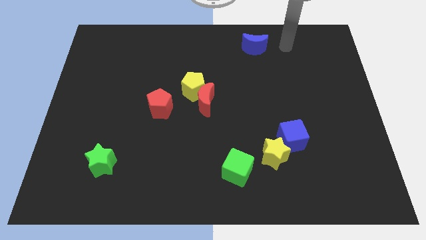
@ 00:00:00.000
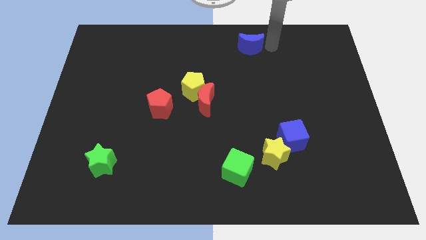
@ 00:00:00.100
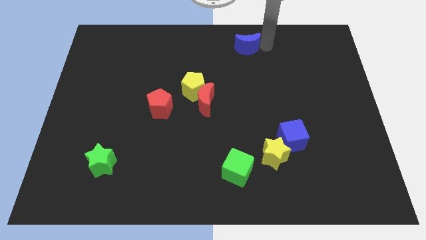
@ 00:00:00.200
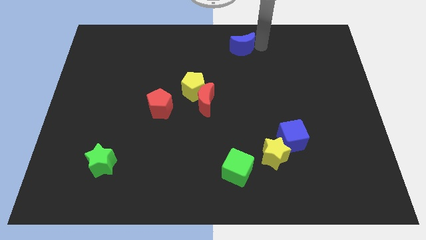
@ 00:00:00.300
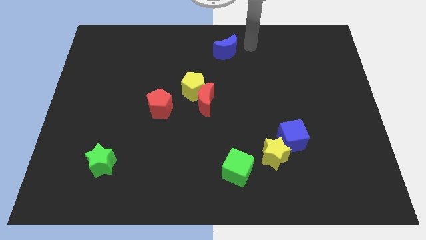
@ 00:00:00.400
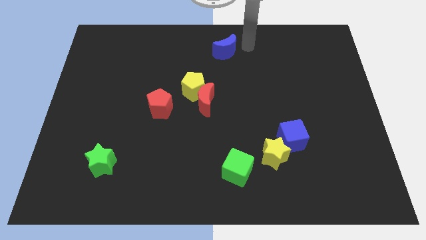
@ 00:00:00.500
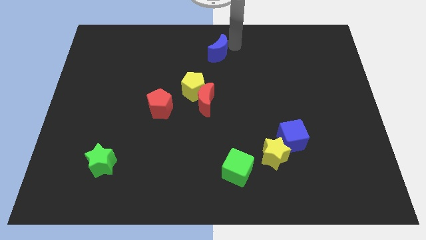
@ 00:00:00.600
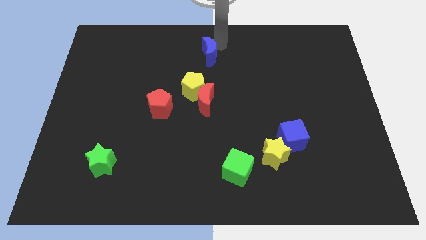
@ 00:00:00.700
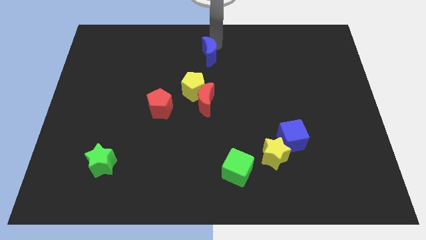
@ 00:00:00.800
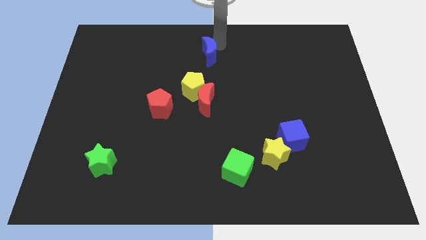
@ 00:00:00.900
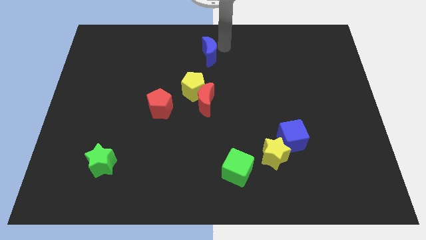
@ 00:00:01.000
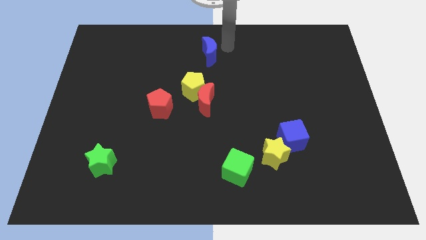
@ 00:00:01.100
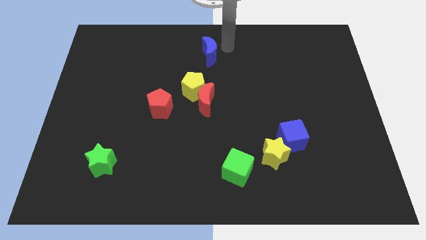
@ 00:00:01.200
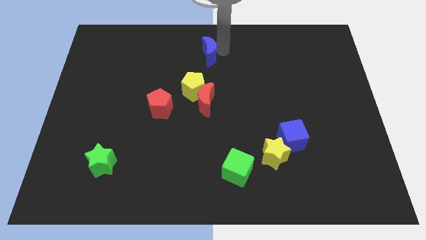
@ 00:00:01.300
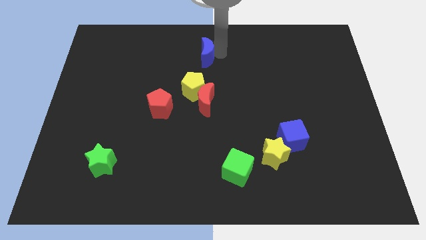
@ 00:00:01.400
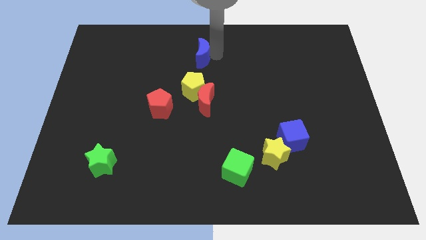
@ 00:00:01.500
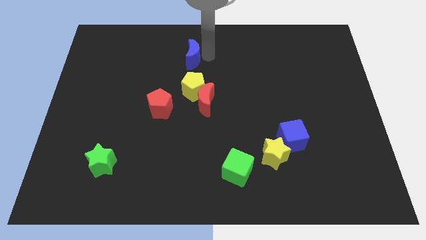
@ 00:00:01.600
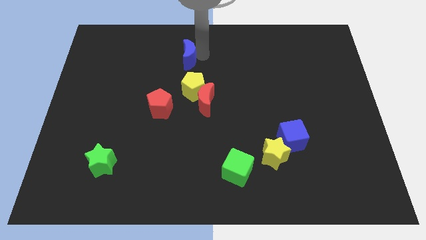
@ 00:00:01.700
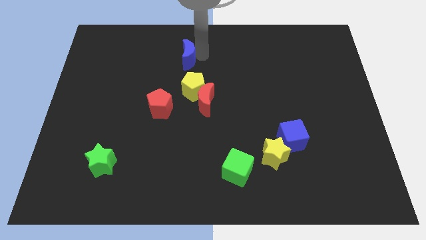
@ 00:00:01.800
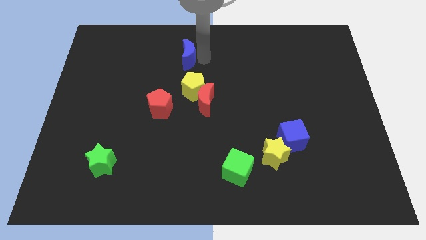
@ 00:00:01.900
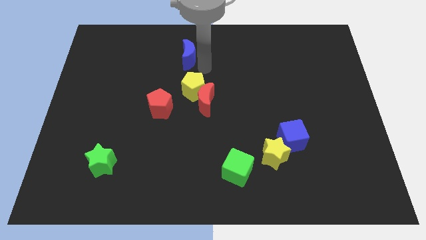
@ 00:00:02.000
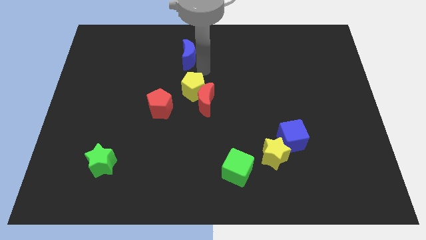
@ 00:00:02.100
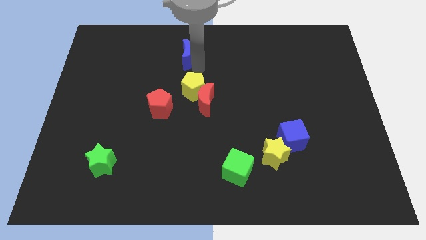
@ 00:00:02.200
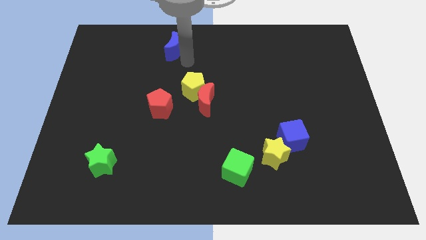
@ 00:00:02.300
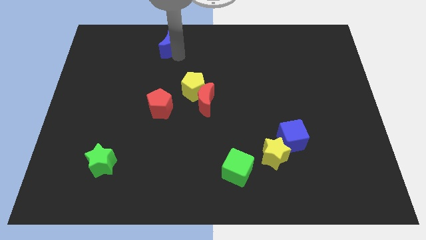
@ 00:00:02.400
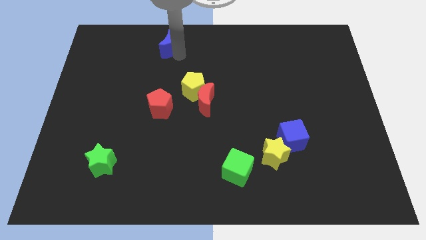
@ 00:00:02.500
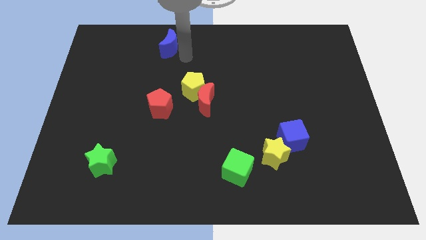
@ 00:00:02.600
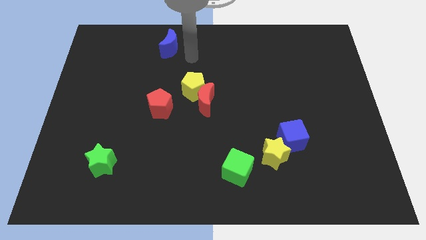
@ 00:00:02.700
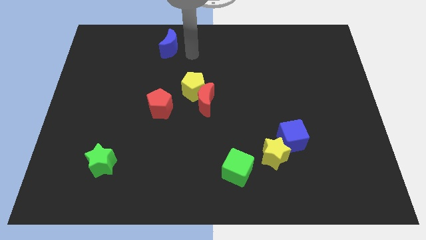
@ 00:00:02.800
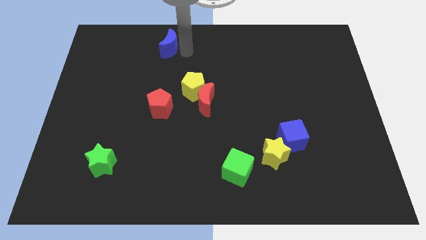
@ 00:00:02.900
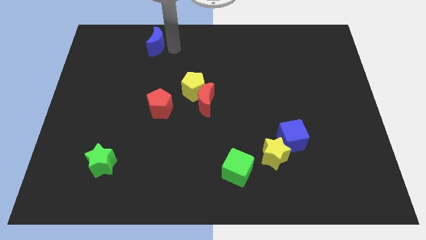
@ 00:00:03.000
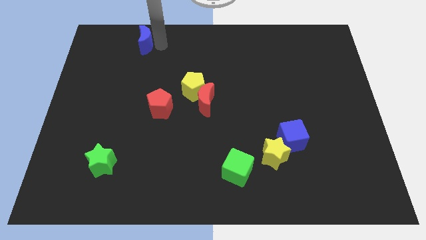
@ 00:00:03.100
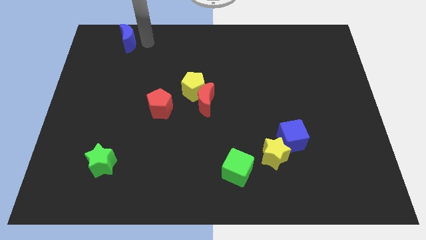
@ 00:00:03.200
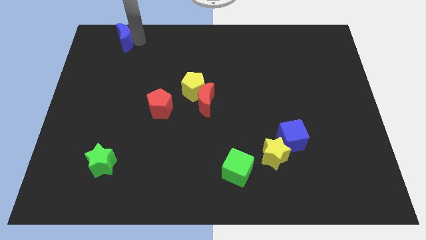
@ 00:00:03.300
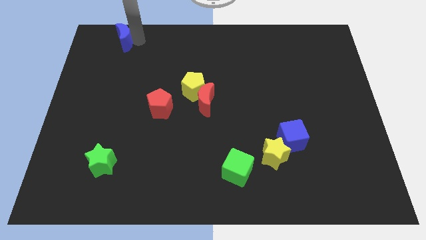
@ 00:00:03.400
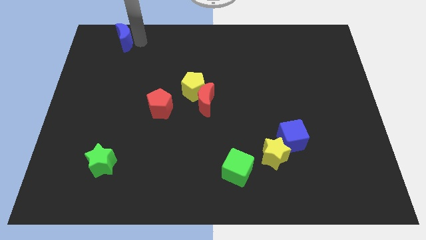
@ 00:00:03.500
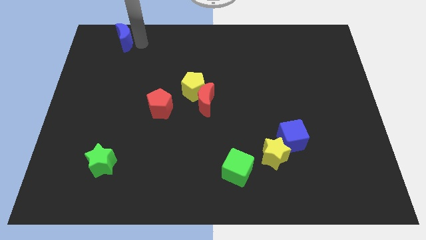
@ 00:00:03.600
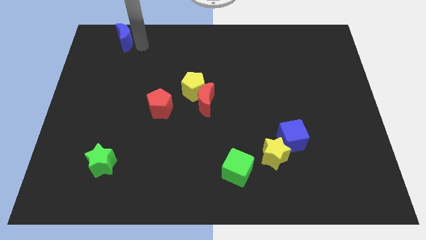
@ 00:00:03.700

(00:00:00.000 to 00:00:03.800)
slide the blue moon towards the top left of the board

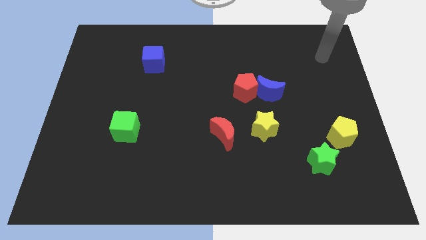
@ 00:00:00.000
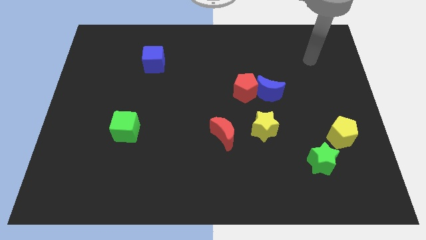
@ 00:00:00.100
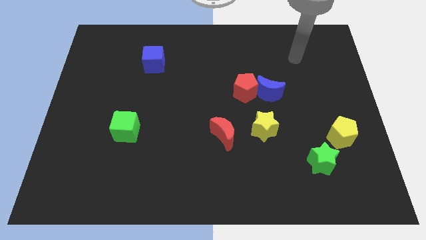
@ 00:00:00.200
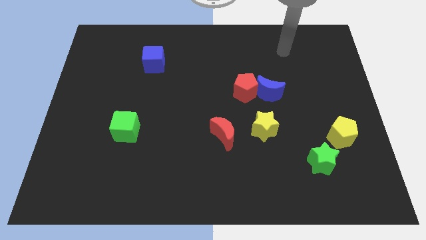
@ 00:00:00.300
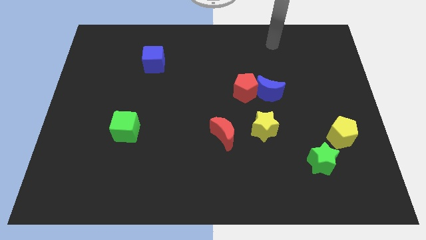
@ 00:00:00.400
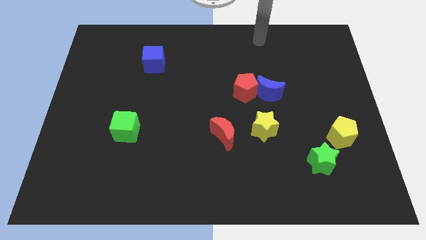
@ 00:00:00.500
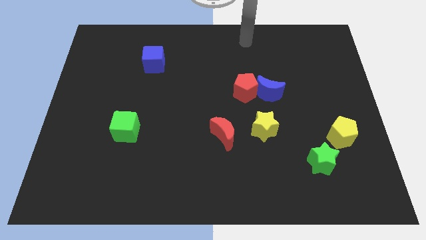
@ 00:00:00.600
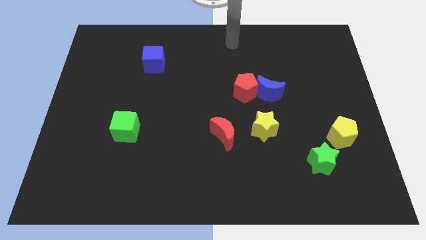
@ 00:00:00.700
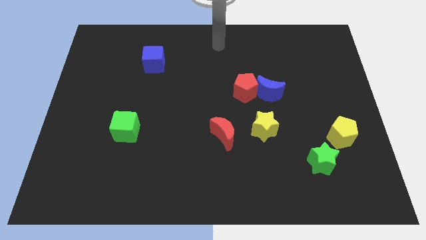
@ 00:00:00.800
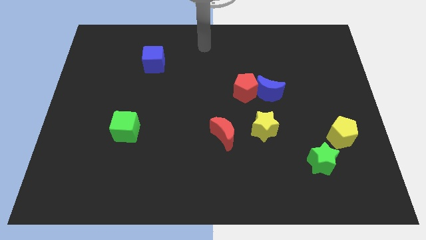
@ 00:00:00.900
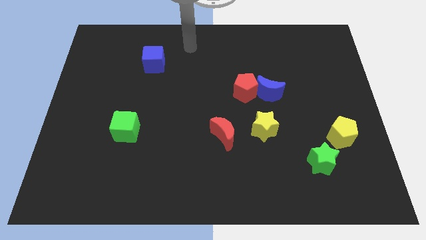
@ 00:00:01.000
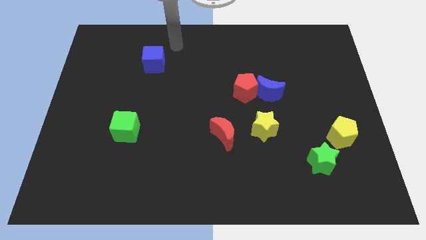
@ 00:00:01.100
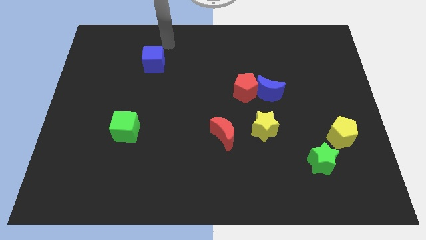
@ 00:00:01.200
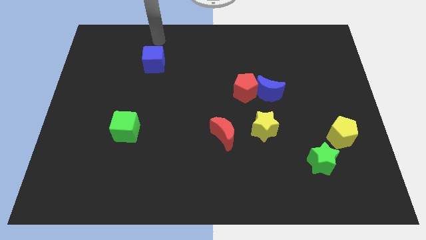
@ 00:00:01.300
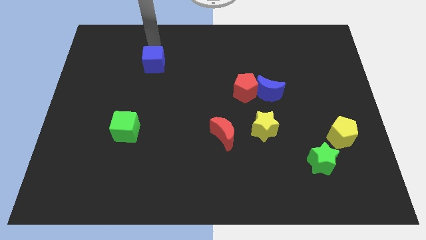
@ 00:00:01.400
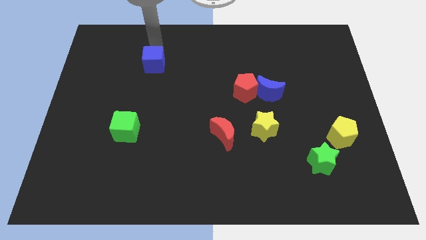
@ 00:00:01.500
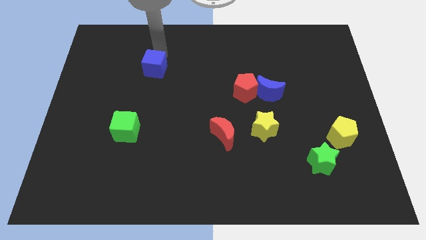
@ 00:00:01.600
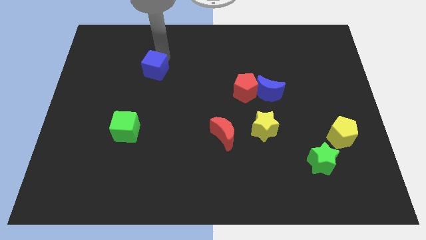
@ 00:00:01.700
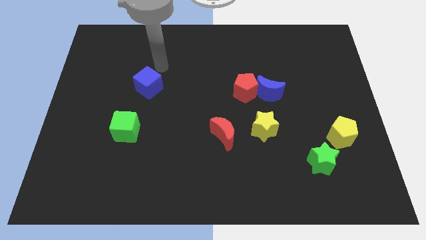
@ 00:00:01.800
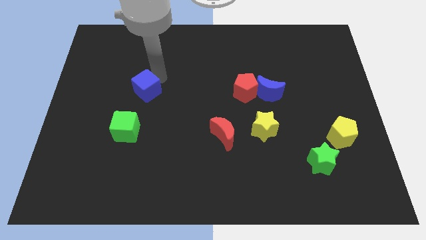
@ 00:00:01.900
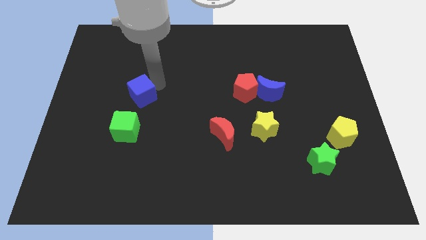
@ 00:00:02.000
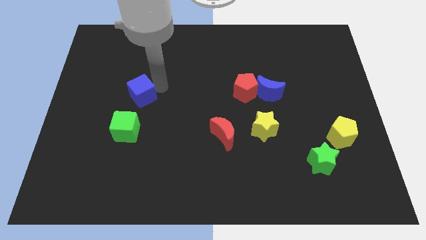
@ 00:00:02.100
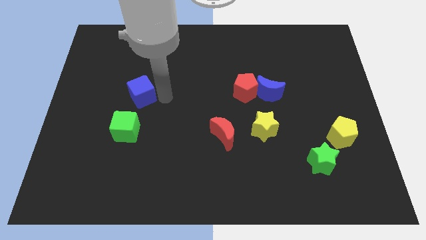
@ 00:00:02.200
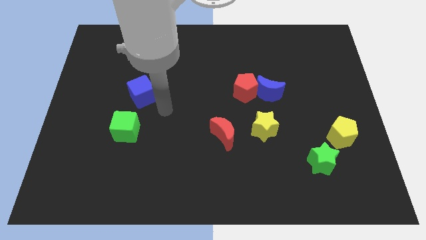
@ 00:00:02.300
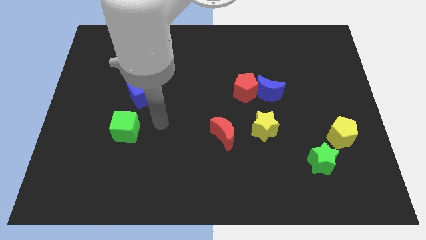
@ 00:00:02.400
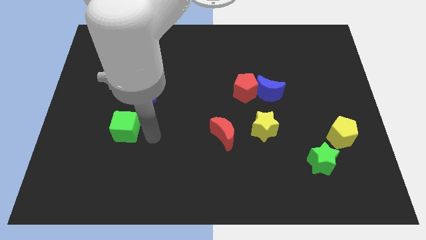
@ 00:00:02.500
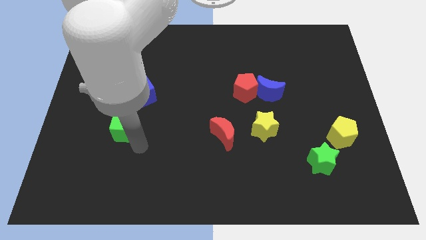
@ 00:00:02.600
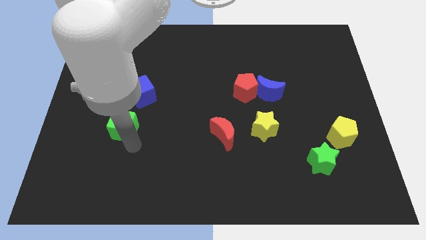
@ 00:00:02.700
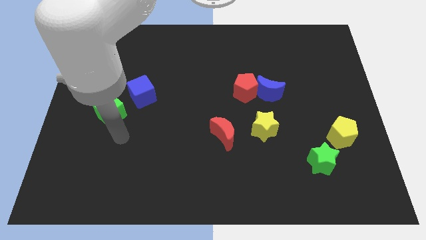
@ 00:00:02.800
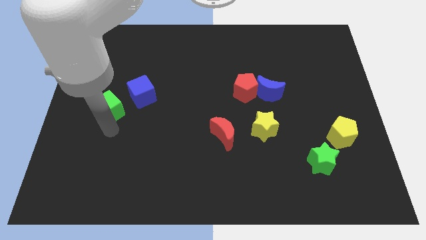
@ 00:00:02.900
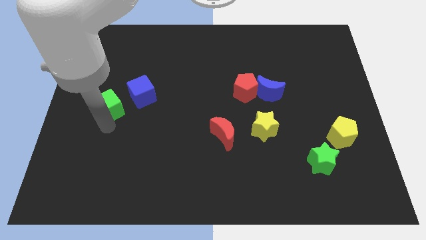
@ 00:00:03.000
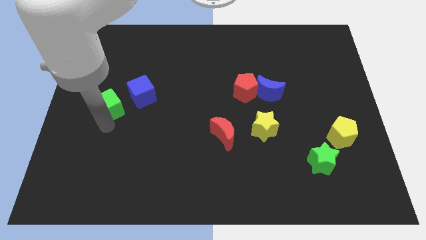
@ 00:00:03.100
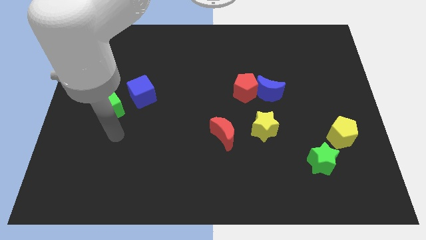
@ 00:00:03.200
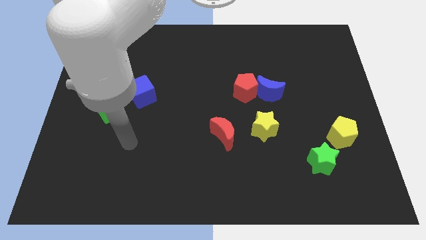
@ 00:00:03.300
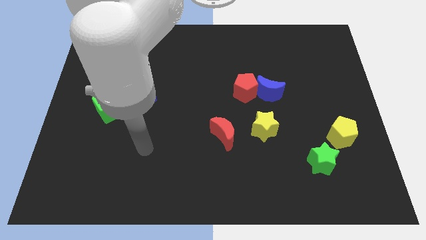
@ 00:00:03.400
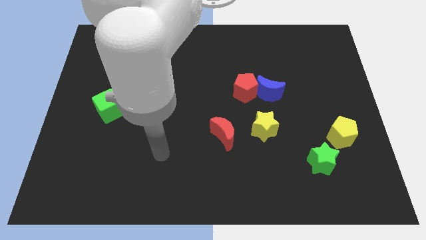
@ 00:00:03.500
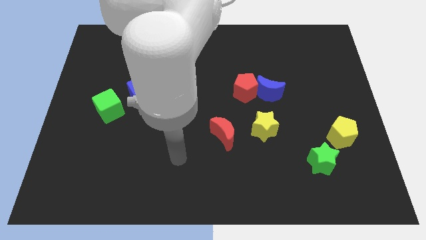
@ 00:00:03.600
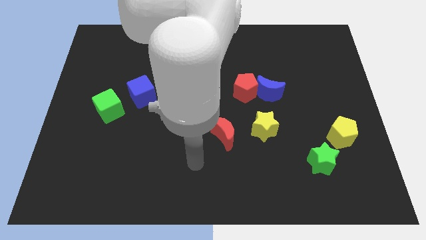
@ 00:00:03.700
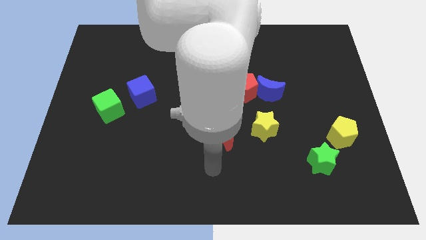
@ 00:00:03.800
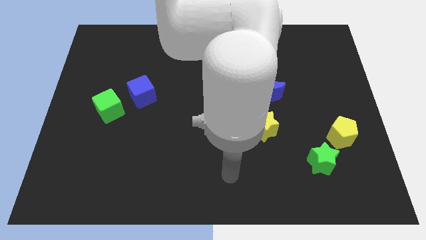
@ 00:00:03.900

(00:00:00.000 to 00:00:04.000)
reposition blue cube simultaneously reposition green cube

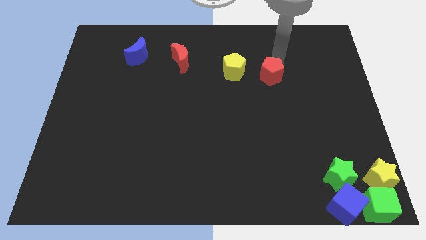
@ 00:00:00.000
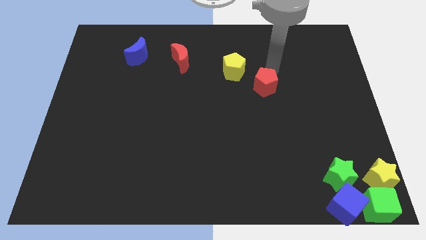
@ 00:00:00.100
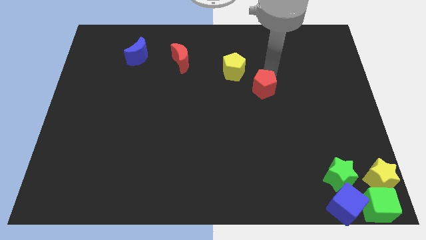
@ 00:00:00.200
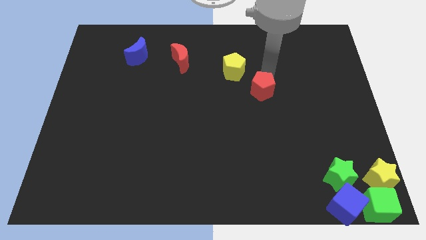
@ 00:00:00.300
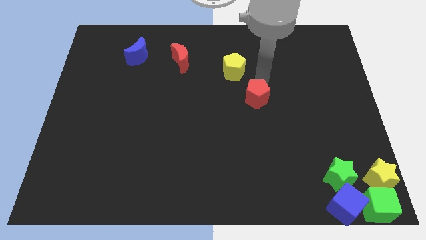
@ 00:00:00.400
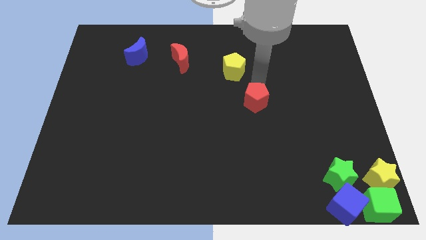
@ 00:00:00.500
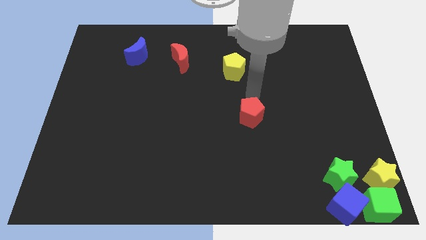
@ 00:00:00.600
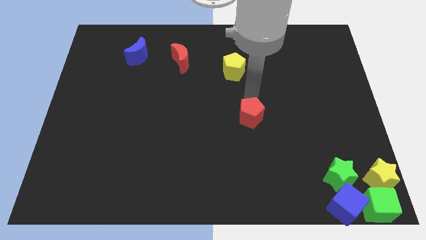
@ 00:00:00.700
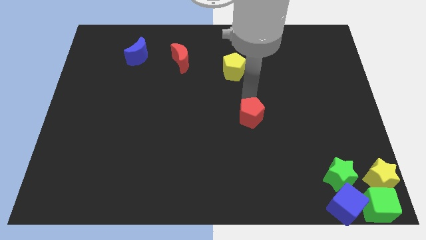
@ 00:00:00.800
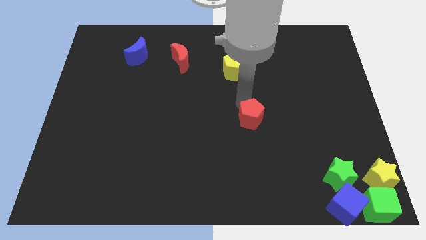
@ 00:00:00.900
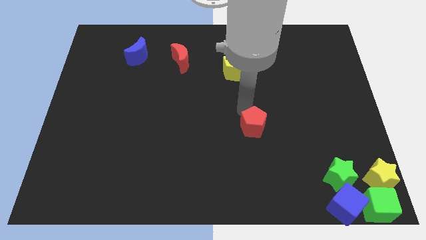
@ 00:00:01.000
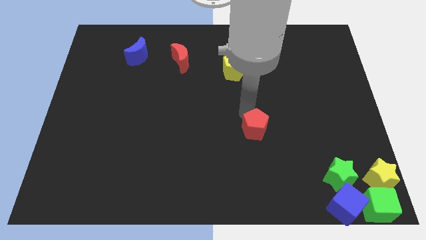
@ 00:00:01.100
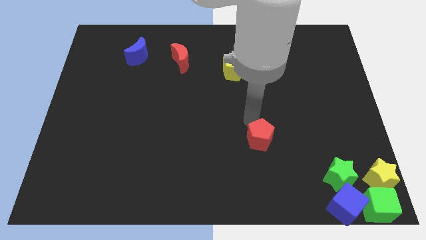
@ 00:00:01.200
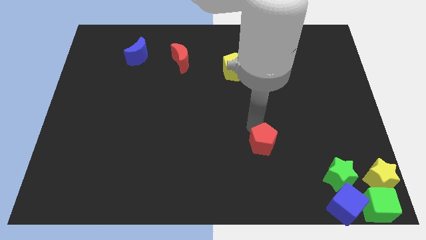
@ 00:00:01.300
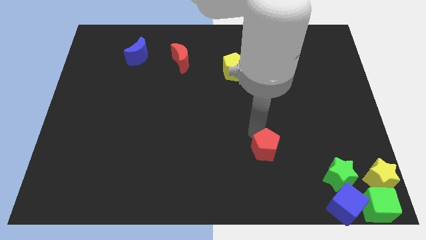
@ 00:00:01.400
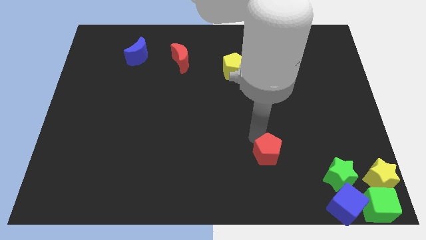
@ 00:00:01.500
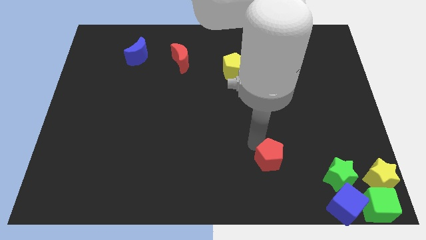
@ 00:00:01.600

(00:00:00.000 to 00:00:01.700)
drag the red pentagon diagonally bottom right to the yellow pentagon
